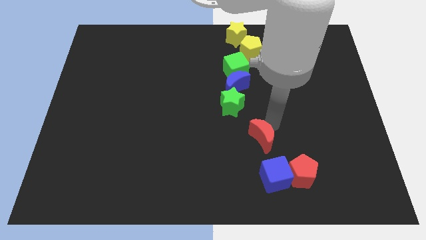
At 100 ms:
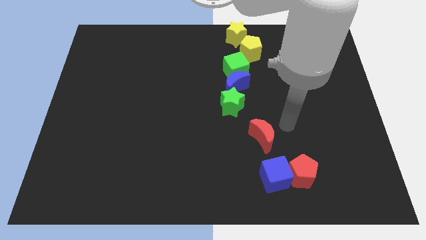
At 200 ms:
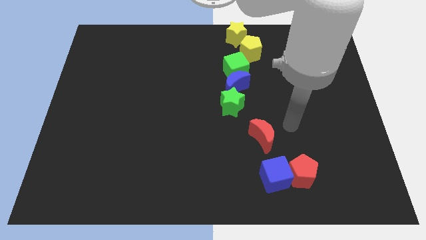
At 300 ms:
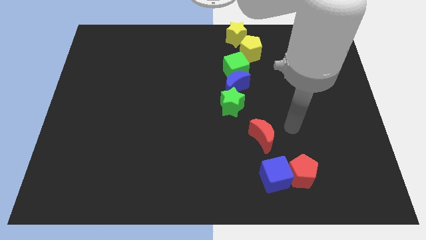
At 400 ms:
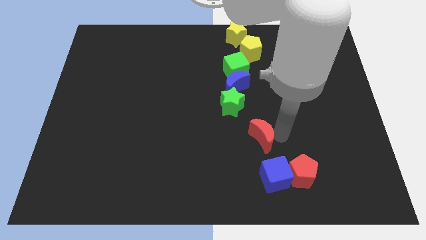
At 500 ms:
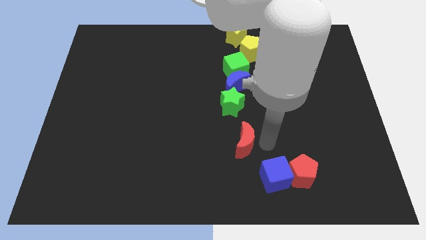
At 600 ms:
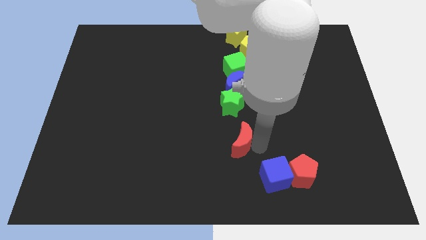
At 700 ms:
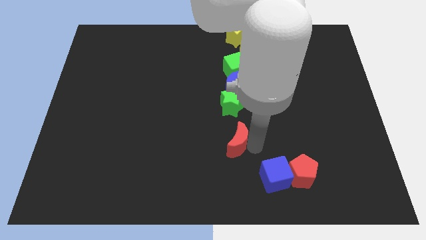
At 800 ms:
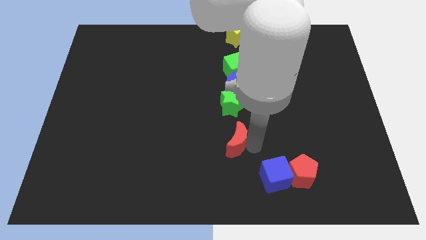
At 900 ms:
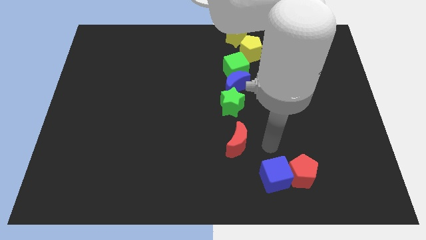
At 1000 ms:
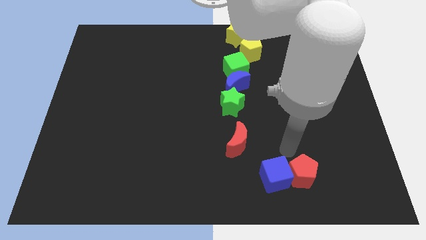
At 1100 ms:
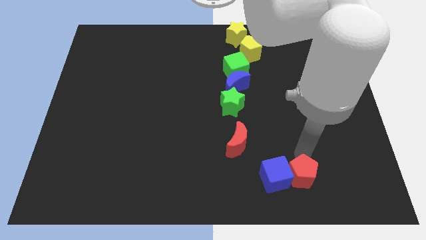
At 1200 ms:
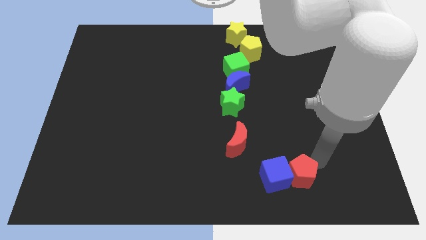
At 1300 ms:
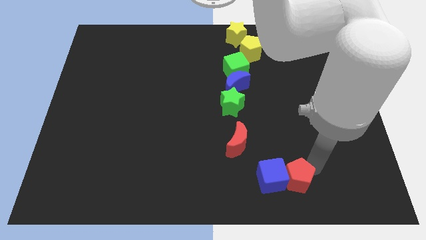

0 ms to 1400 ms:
place the red moon below the green star

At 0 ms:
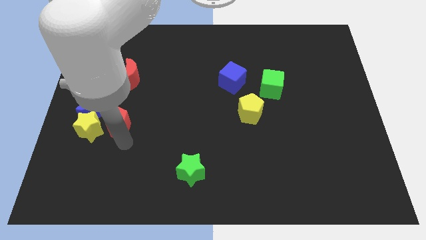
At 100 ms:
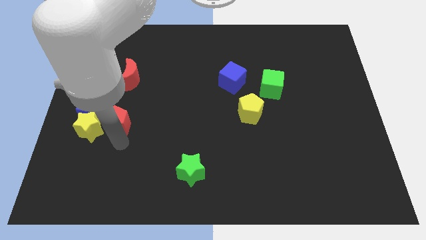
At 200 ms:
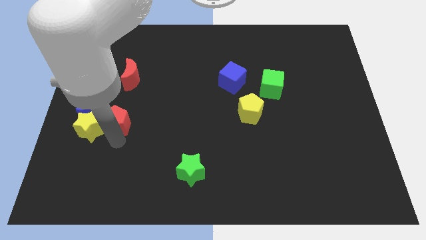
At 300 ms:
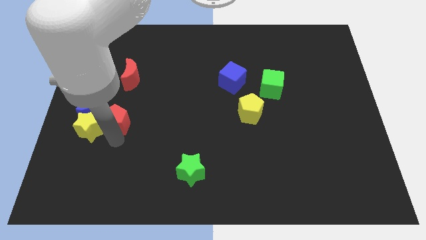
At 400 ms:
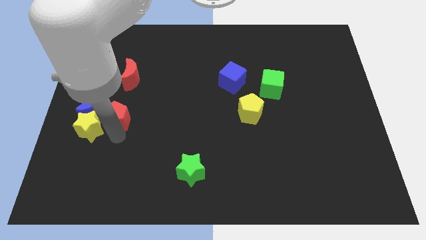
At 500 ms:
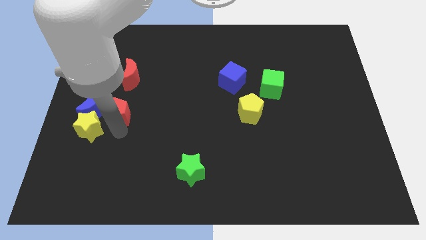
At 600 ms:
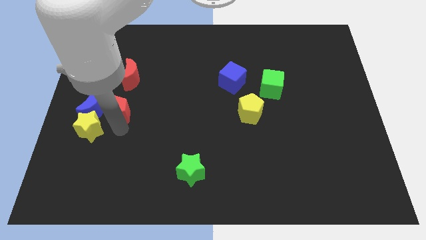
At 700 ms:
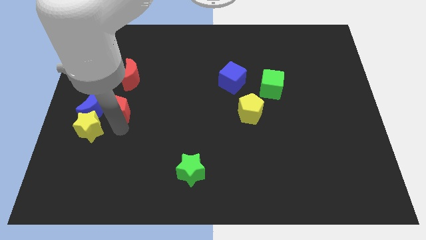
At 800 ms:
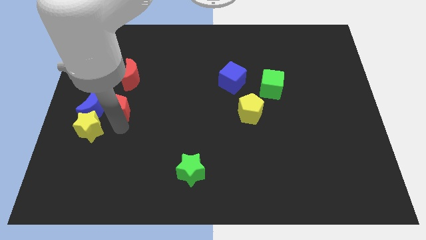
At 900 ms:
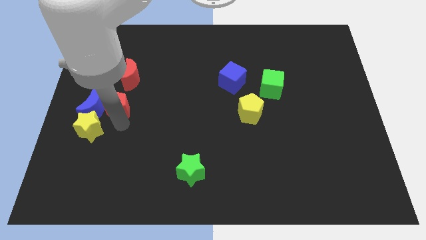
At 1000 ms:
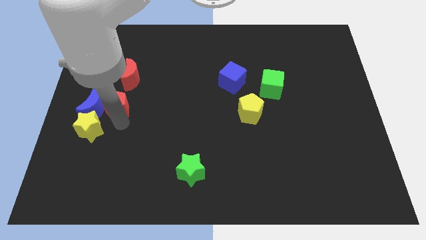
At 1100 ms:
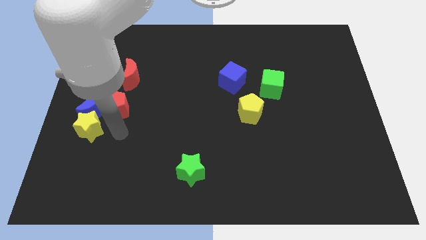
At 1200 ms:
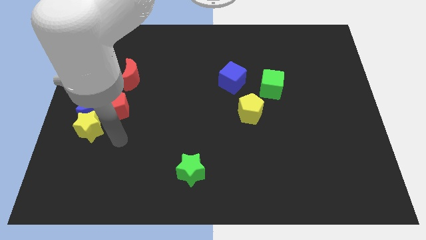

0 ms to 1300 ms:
move red pentagon to the right of blue moon

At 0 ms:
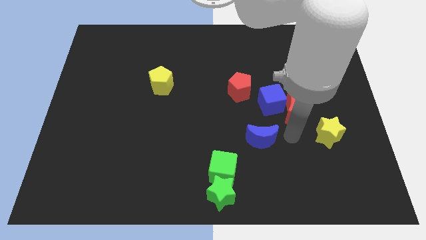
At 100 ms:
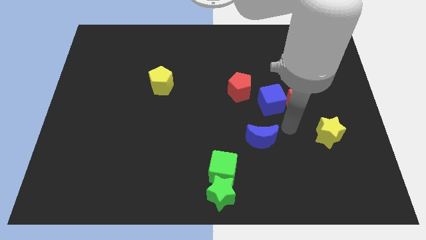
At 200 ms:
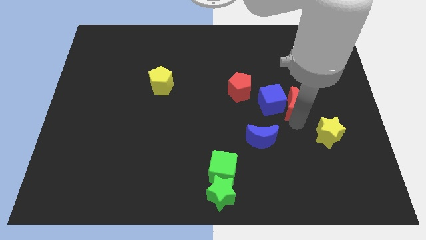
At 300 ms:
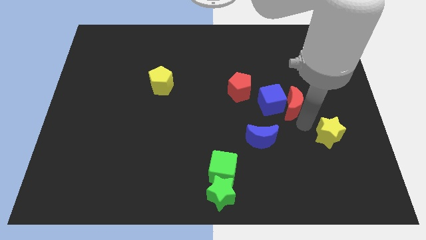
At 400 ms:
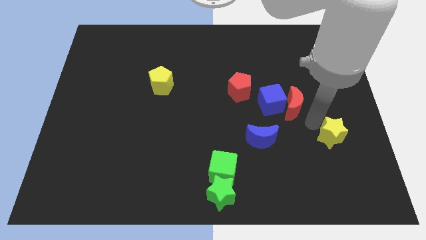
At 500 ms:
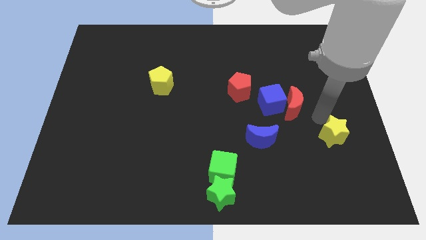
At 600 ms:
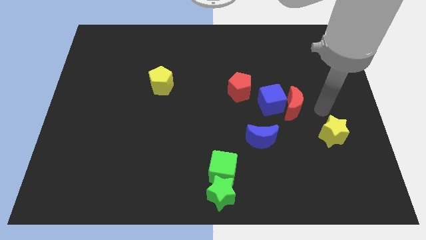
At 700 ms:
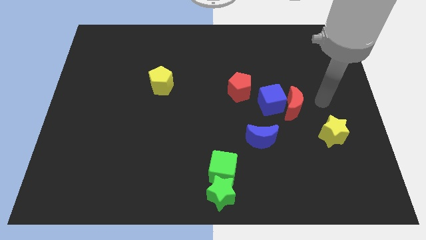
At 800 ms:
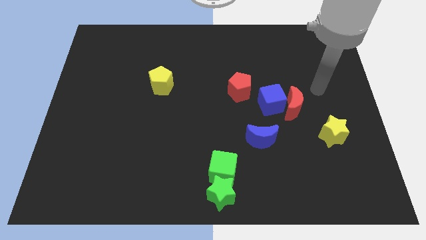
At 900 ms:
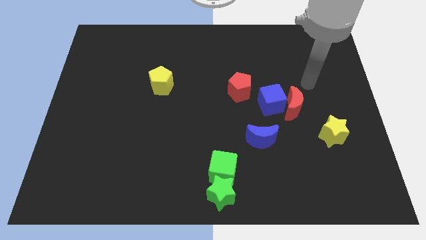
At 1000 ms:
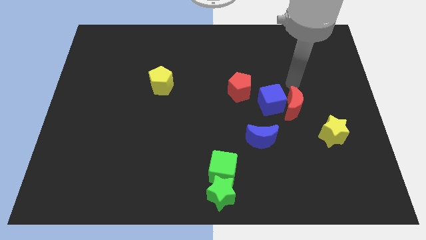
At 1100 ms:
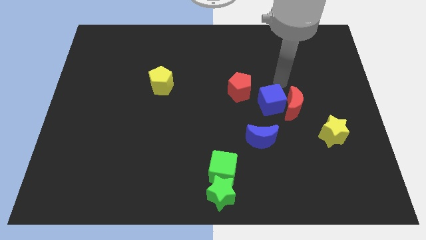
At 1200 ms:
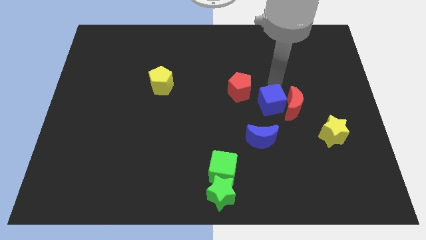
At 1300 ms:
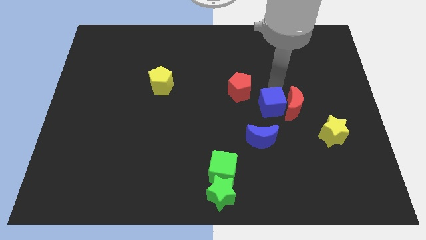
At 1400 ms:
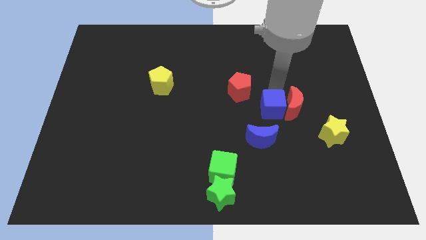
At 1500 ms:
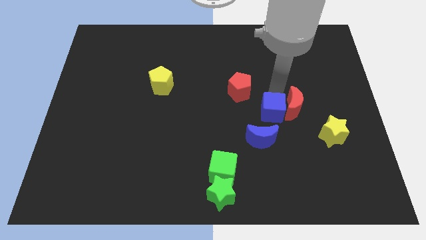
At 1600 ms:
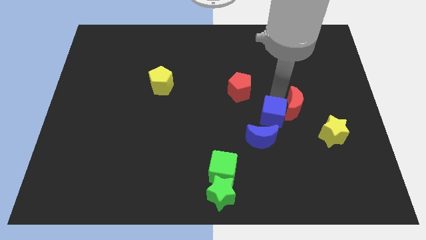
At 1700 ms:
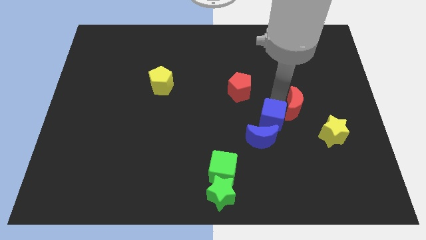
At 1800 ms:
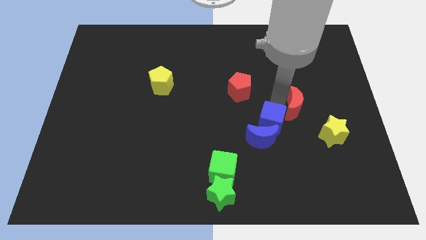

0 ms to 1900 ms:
slide the blue cube close to the blue crescent

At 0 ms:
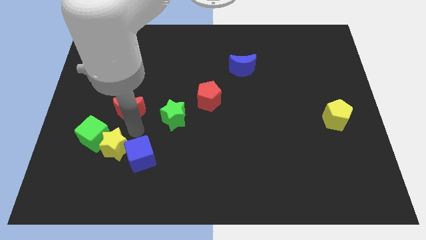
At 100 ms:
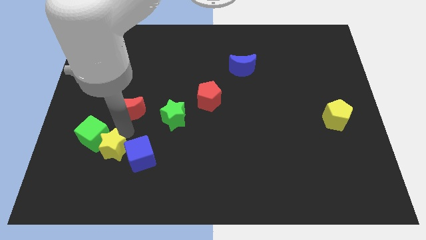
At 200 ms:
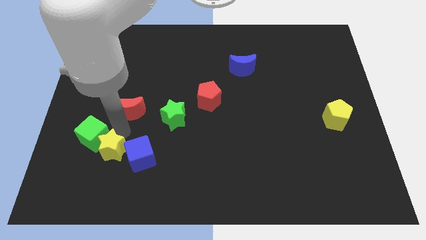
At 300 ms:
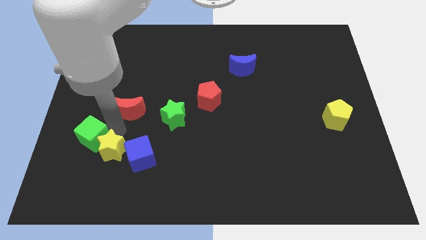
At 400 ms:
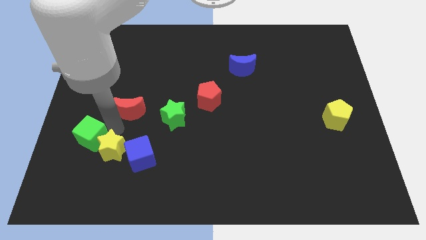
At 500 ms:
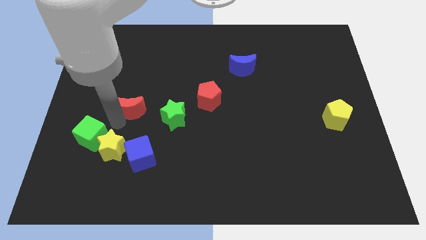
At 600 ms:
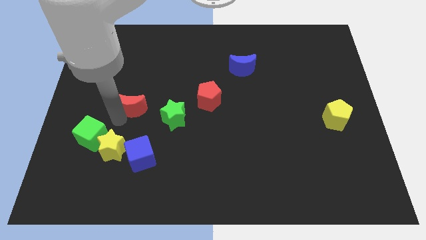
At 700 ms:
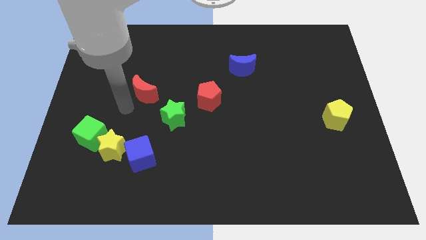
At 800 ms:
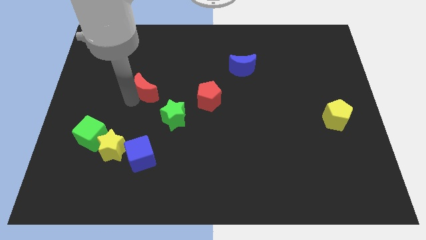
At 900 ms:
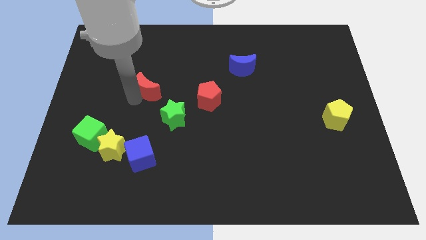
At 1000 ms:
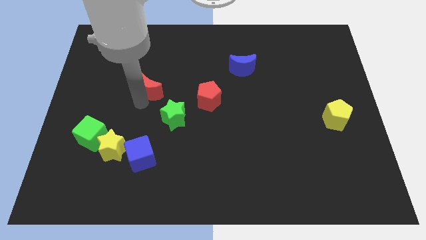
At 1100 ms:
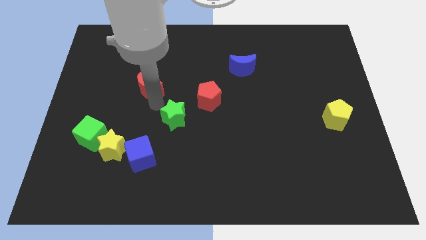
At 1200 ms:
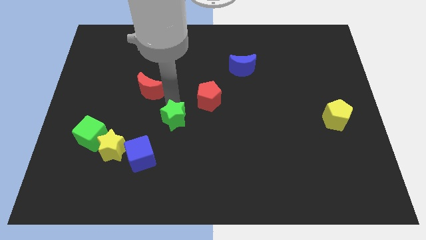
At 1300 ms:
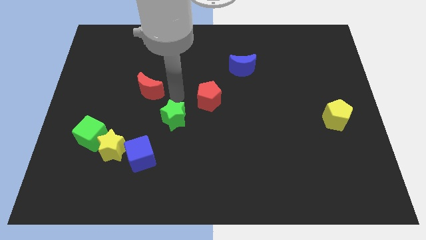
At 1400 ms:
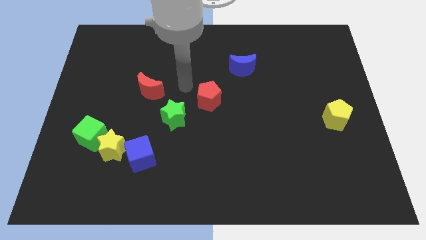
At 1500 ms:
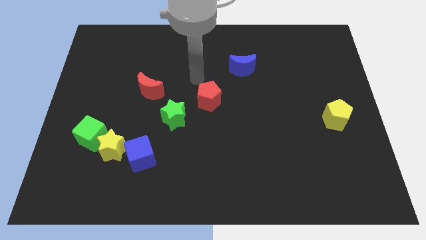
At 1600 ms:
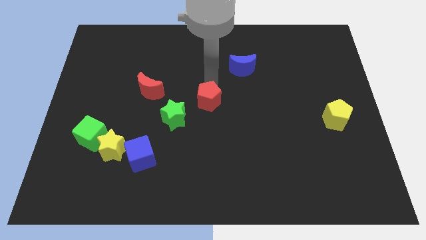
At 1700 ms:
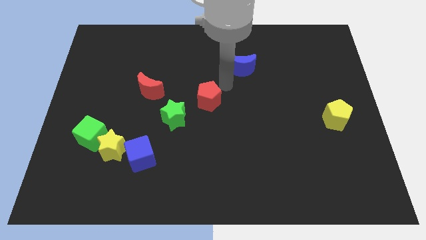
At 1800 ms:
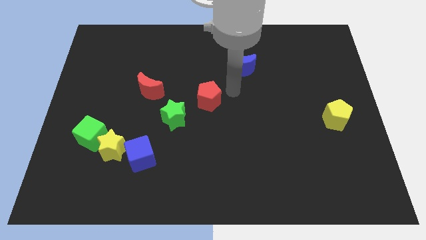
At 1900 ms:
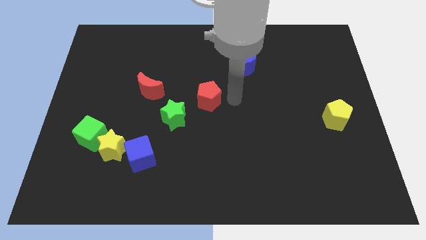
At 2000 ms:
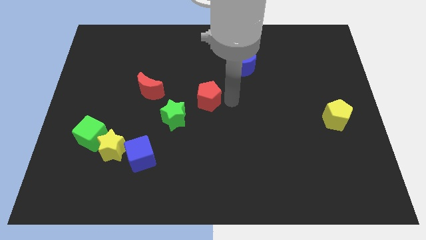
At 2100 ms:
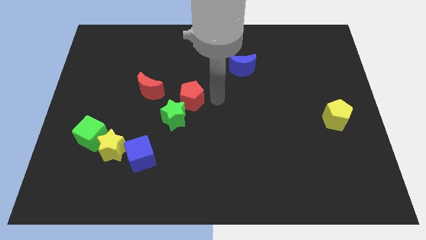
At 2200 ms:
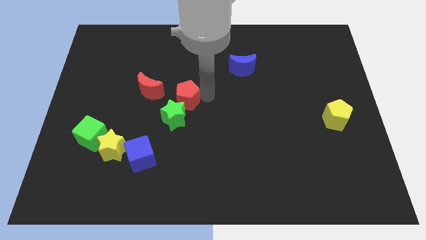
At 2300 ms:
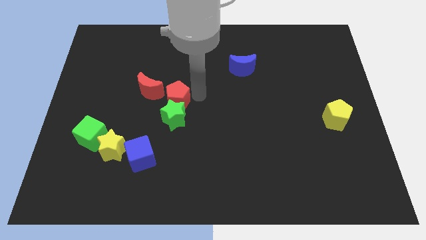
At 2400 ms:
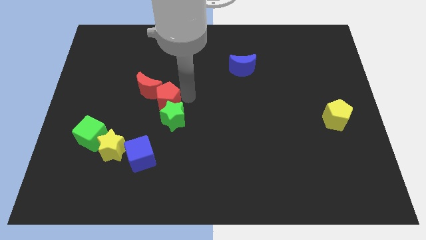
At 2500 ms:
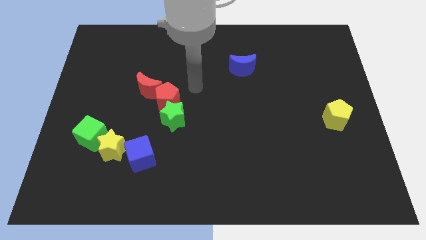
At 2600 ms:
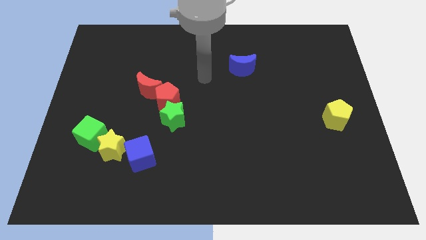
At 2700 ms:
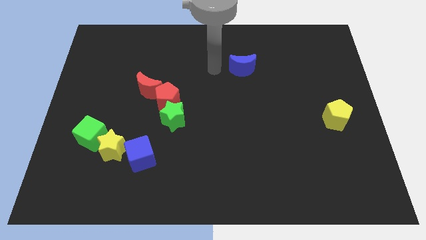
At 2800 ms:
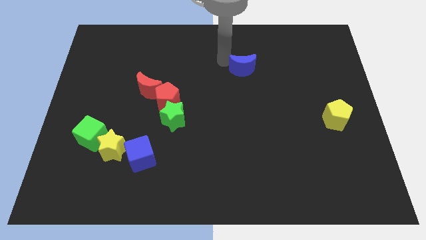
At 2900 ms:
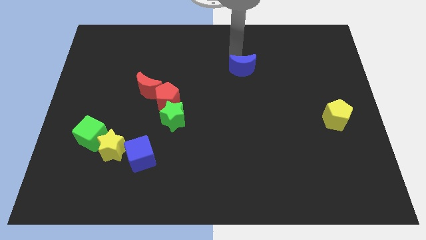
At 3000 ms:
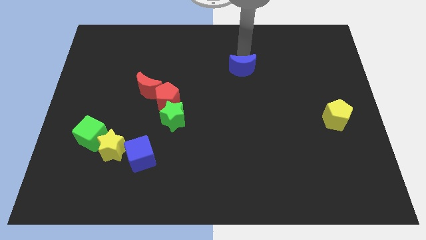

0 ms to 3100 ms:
push the red pentagon into the red moon

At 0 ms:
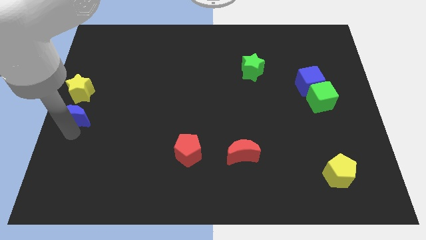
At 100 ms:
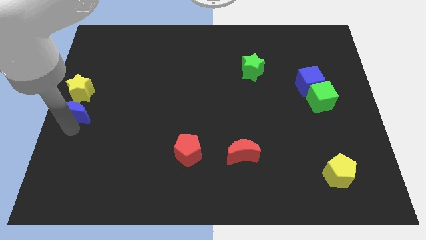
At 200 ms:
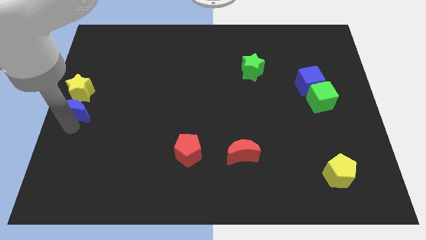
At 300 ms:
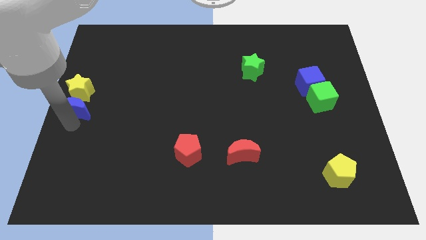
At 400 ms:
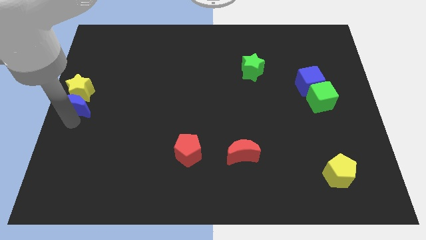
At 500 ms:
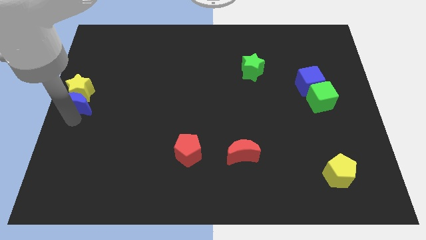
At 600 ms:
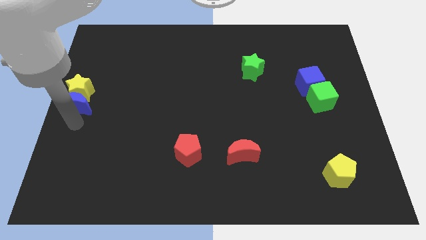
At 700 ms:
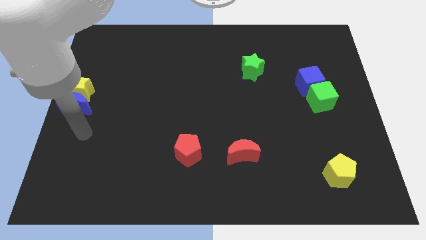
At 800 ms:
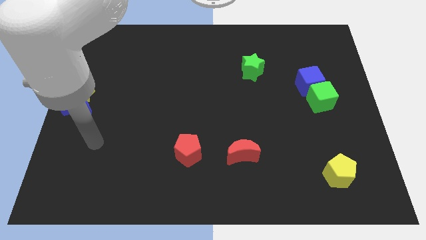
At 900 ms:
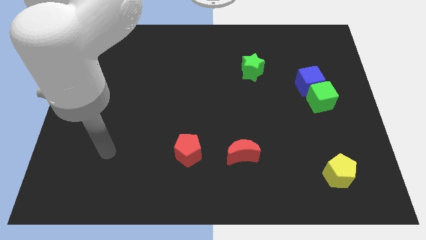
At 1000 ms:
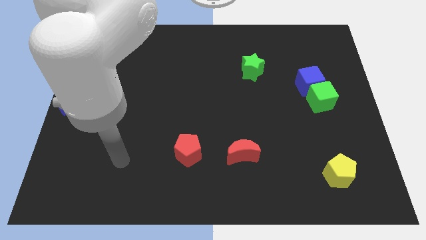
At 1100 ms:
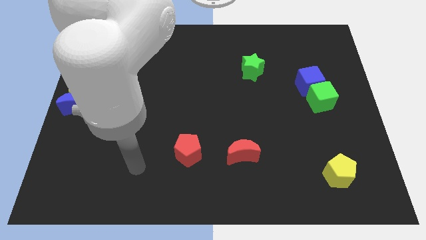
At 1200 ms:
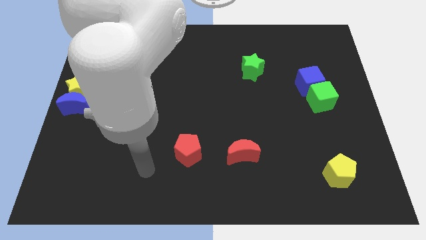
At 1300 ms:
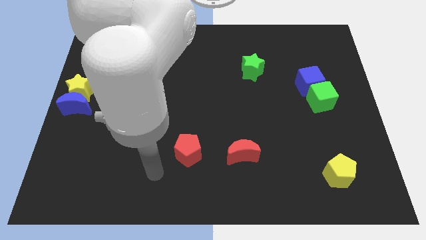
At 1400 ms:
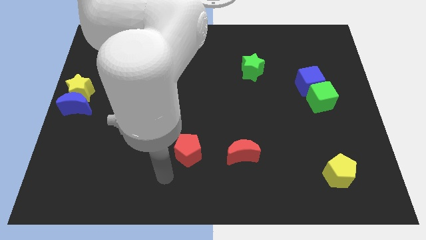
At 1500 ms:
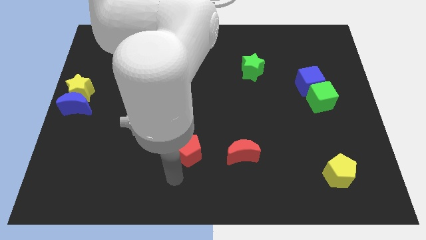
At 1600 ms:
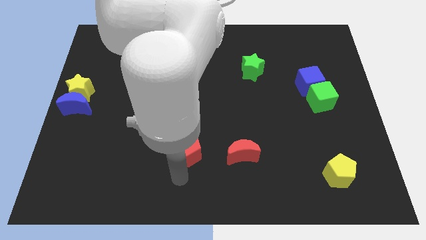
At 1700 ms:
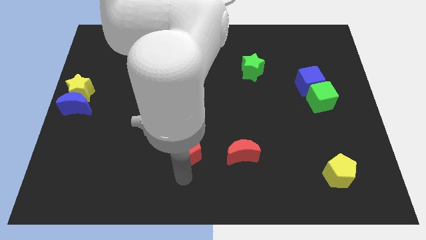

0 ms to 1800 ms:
point your arm below the red pentagon
